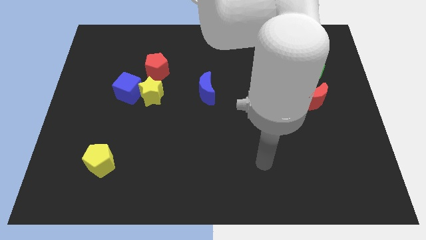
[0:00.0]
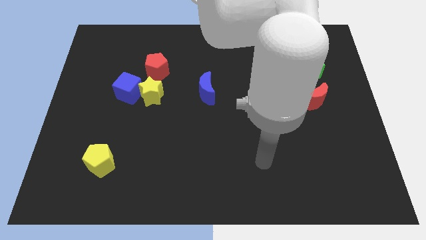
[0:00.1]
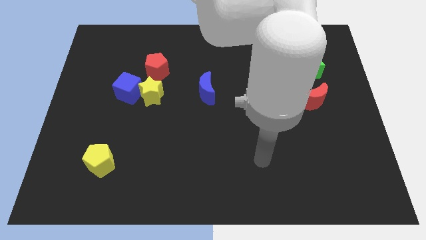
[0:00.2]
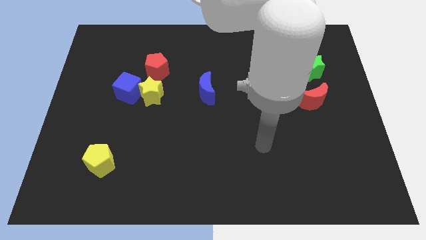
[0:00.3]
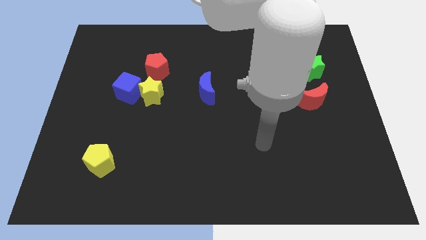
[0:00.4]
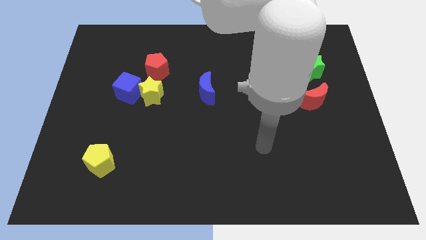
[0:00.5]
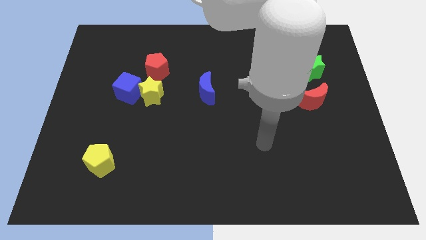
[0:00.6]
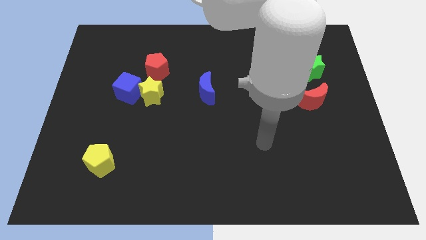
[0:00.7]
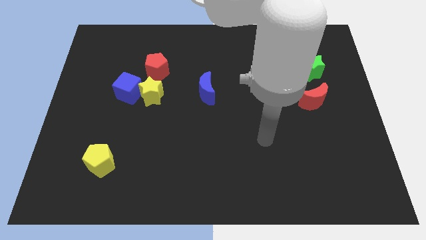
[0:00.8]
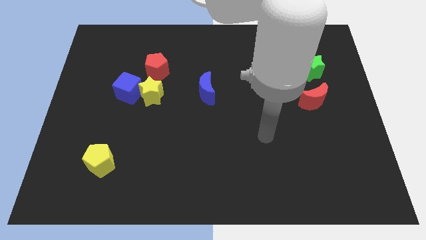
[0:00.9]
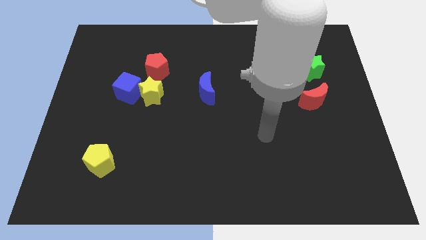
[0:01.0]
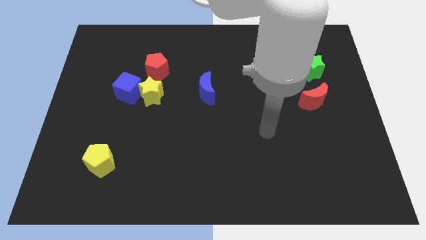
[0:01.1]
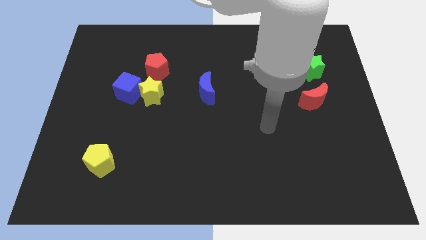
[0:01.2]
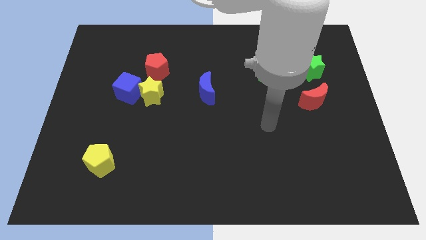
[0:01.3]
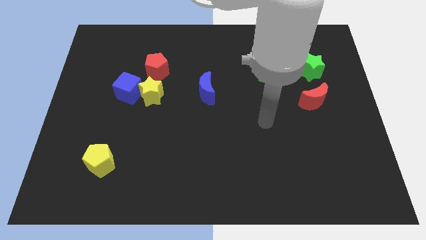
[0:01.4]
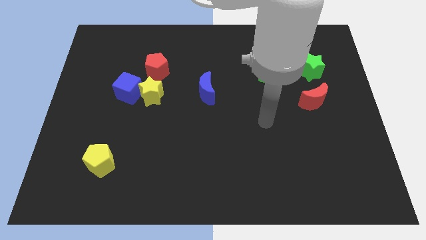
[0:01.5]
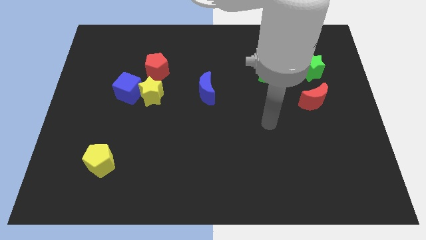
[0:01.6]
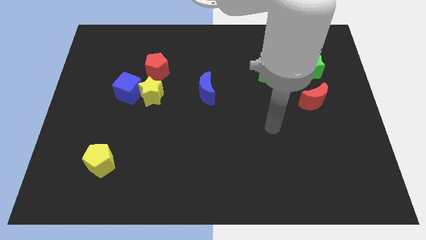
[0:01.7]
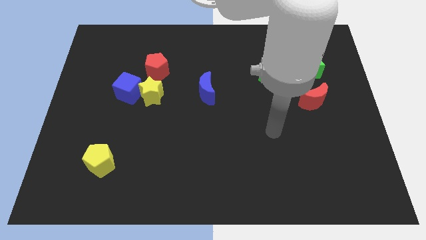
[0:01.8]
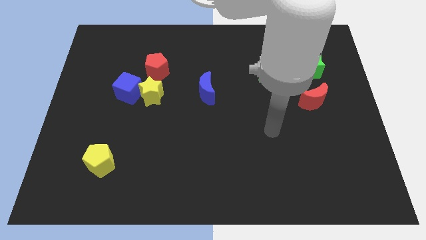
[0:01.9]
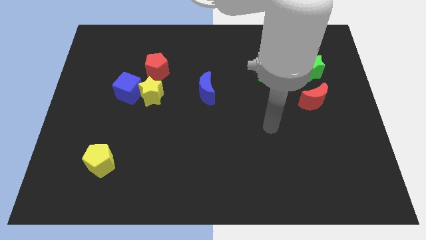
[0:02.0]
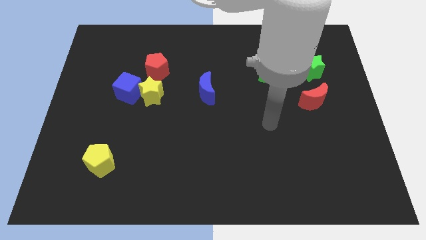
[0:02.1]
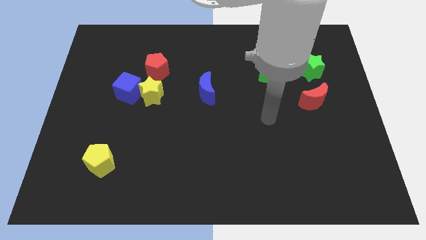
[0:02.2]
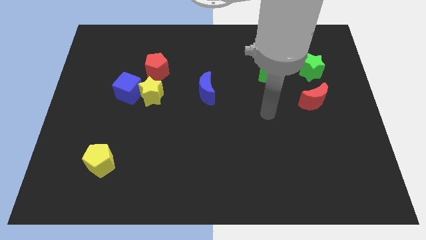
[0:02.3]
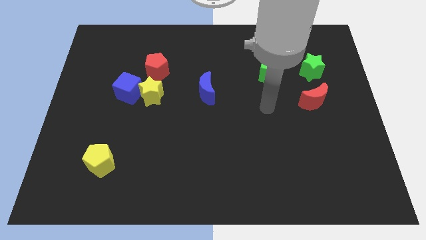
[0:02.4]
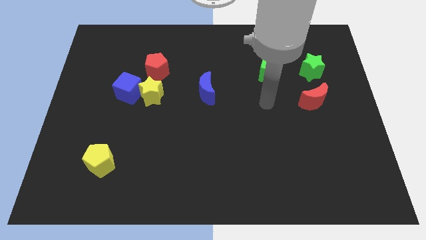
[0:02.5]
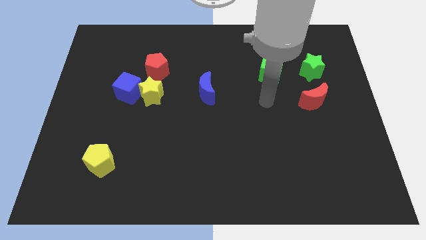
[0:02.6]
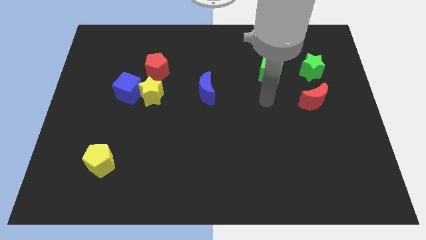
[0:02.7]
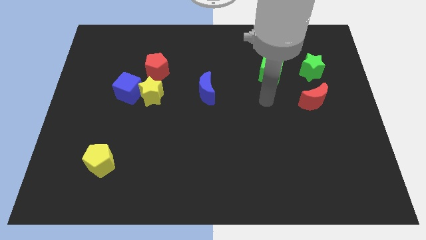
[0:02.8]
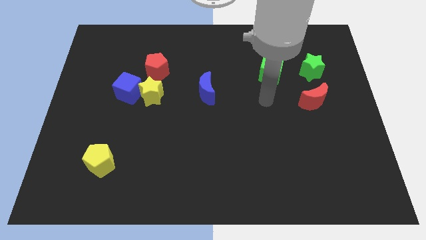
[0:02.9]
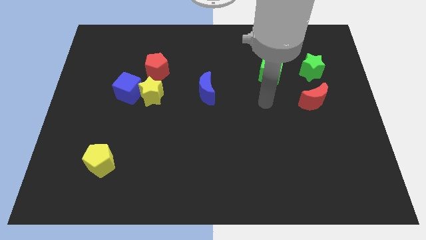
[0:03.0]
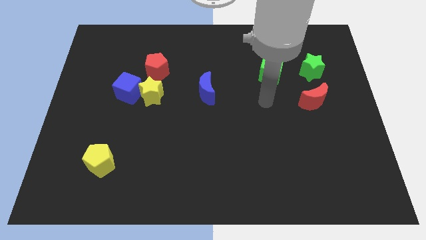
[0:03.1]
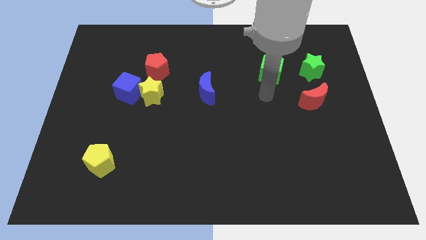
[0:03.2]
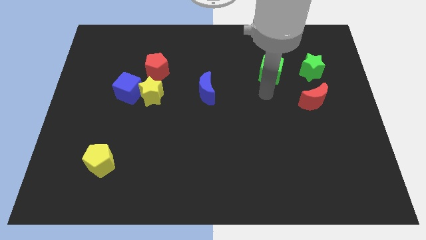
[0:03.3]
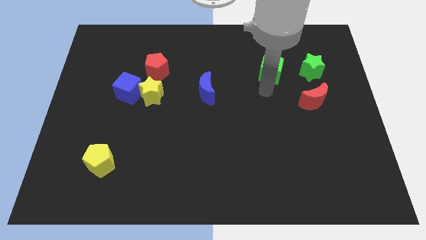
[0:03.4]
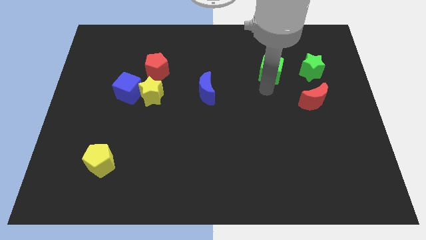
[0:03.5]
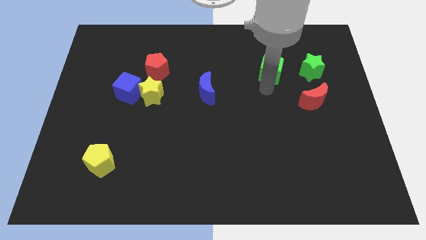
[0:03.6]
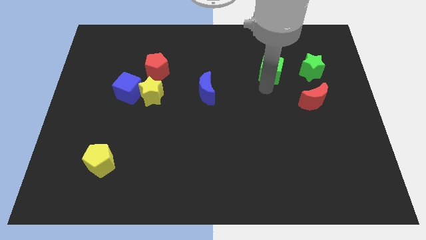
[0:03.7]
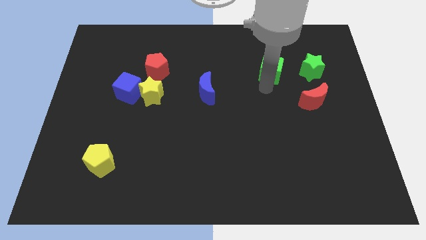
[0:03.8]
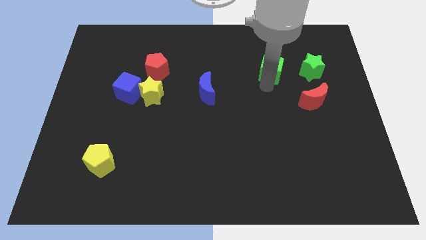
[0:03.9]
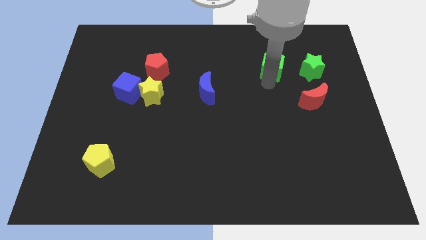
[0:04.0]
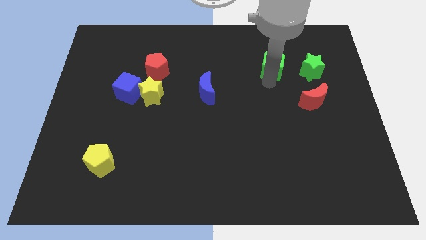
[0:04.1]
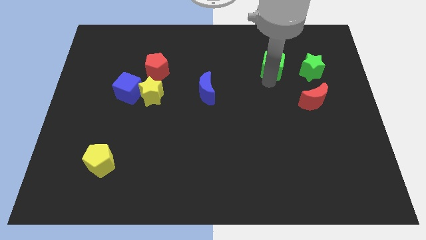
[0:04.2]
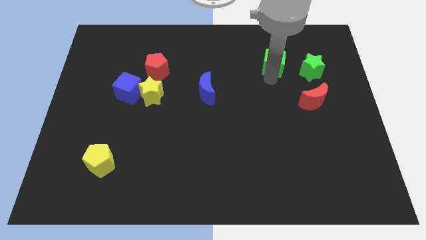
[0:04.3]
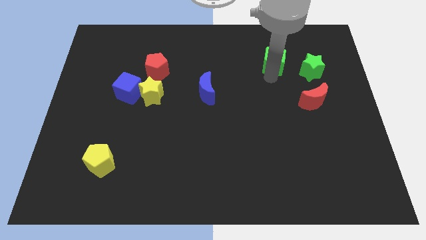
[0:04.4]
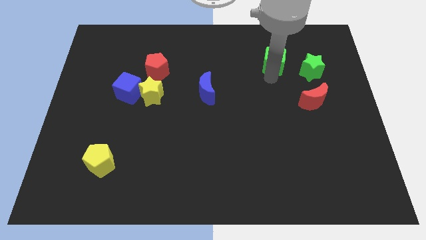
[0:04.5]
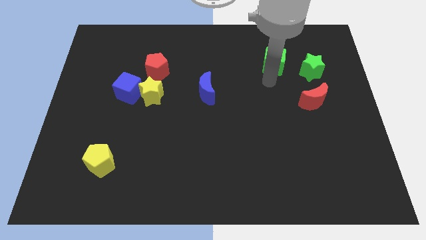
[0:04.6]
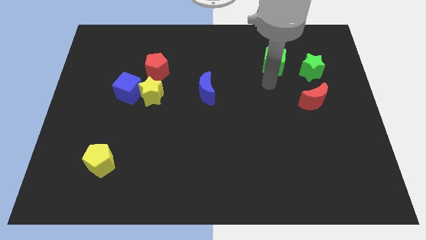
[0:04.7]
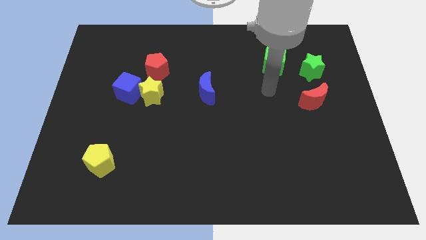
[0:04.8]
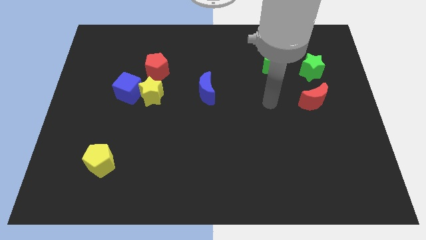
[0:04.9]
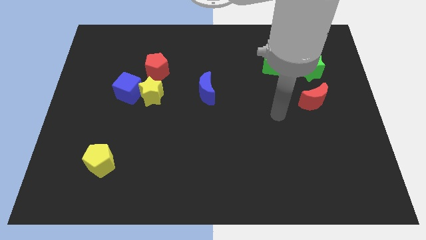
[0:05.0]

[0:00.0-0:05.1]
slightly push the green cube towards the top

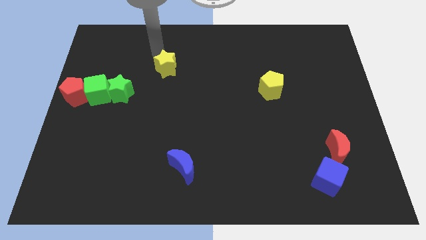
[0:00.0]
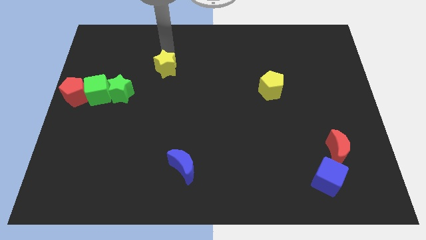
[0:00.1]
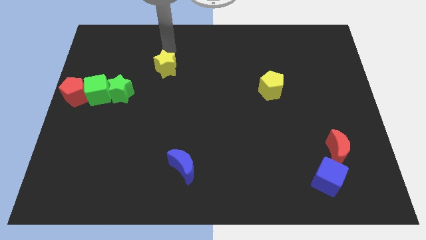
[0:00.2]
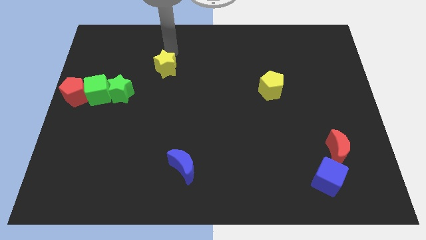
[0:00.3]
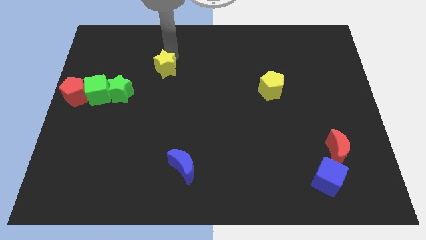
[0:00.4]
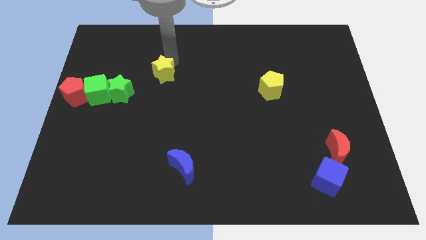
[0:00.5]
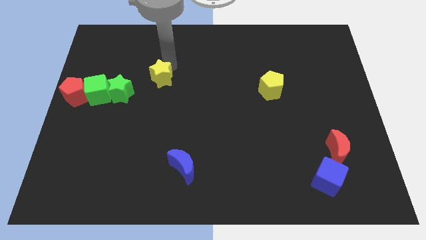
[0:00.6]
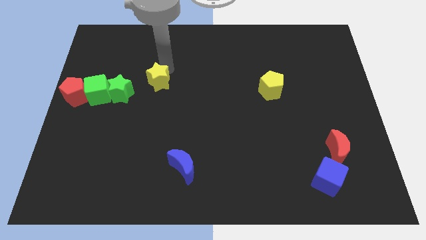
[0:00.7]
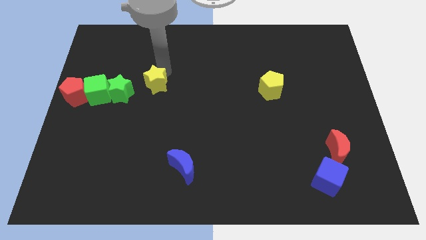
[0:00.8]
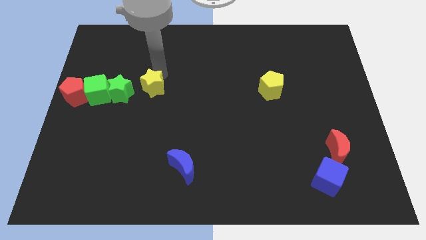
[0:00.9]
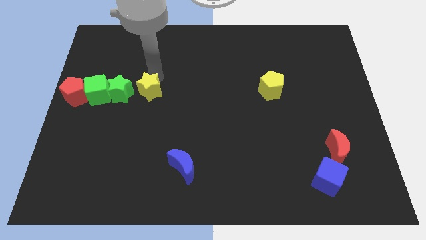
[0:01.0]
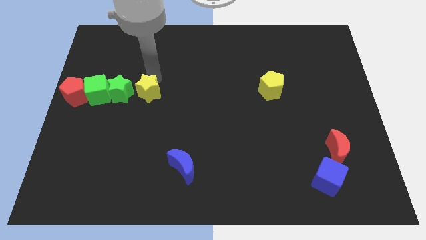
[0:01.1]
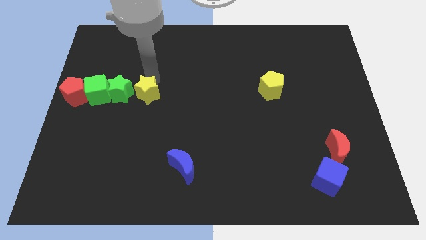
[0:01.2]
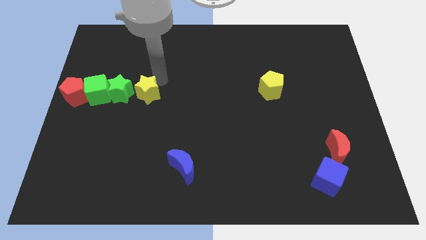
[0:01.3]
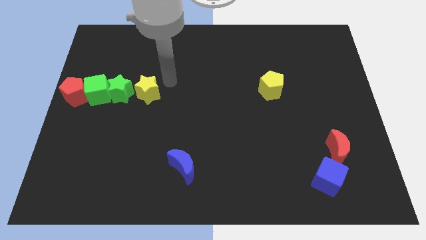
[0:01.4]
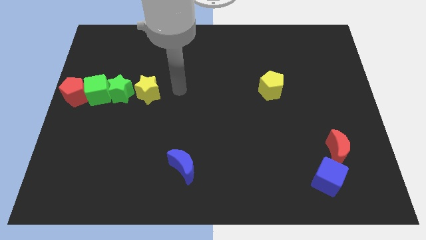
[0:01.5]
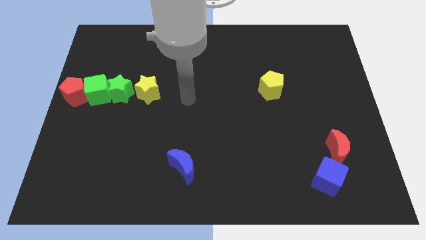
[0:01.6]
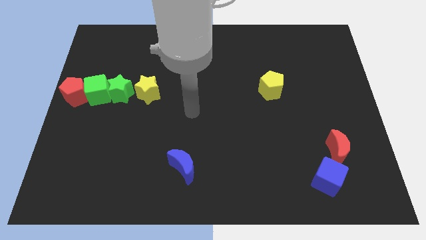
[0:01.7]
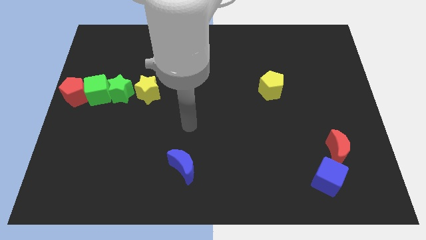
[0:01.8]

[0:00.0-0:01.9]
push the yellow star close to the green star

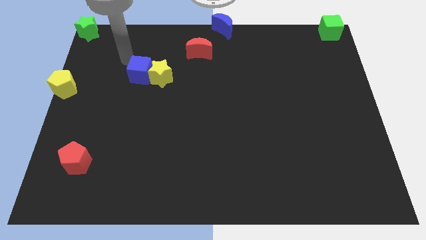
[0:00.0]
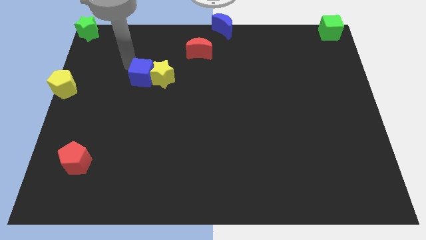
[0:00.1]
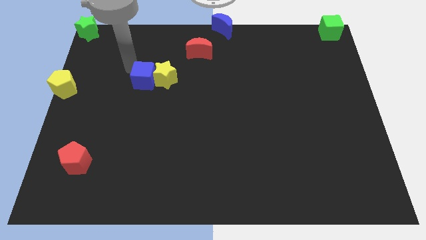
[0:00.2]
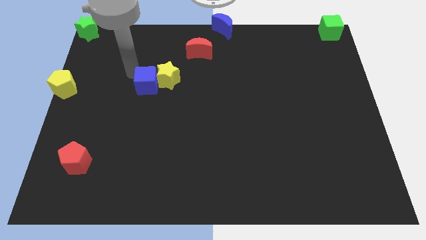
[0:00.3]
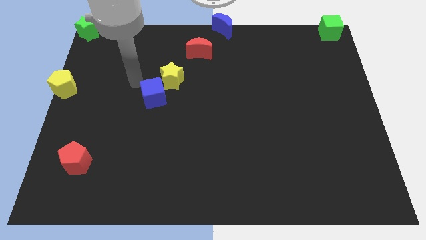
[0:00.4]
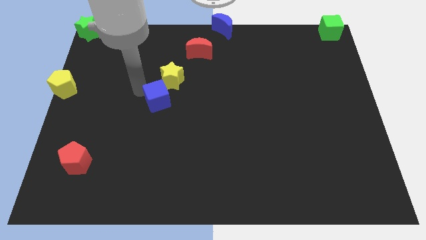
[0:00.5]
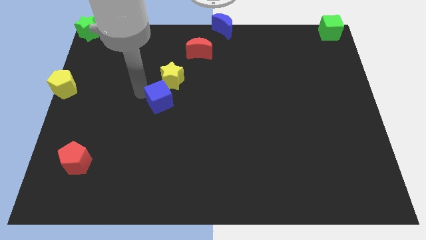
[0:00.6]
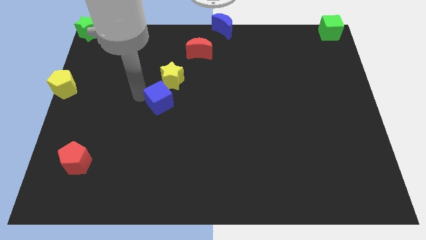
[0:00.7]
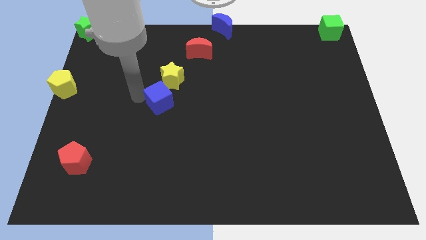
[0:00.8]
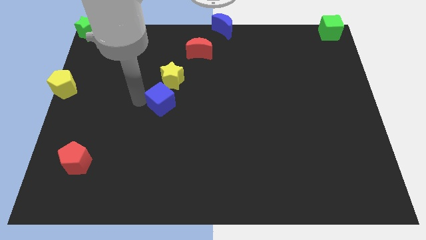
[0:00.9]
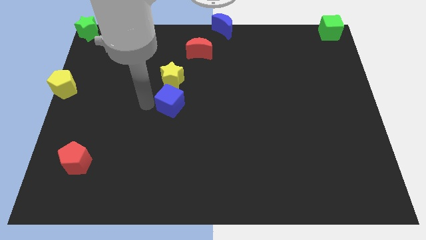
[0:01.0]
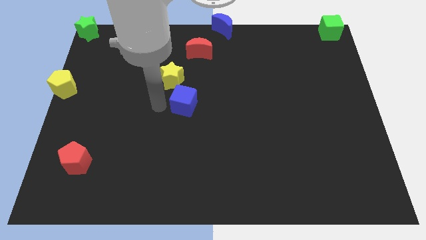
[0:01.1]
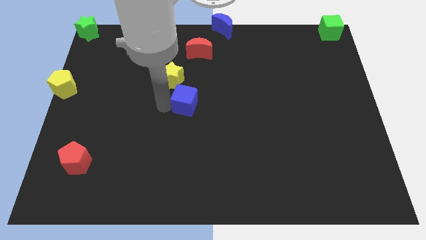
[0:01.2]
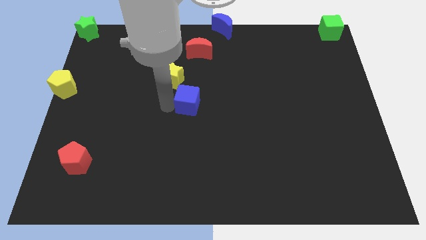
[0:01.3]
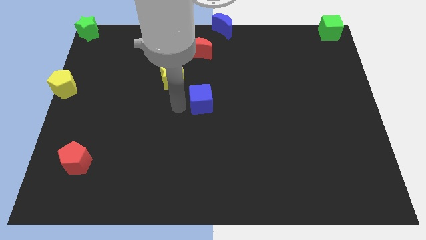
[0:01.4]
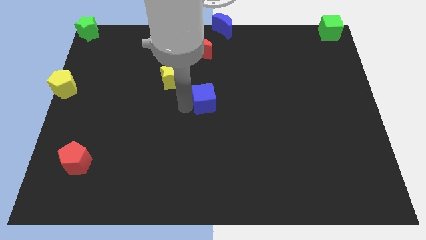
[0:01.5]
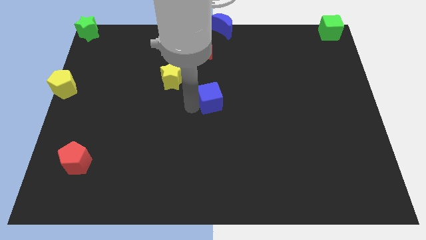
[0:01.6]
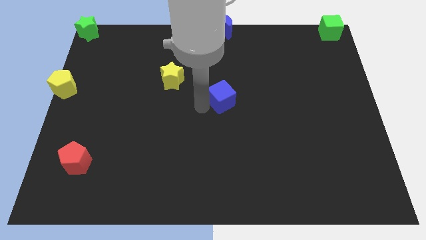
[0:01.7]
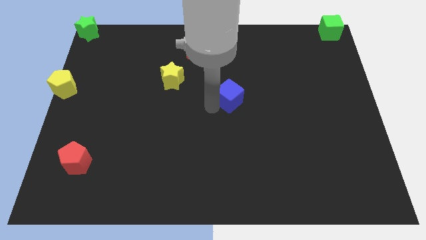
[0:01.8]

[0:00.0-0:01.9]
separate the blue cube from the yellow star
